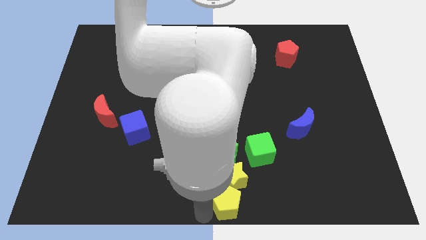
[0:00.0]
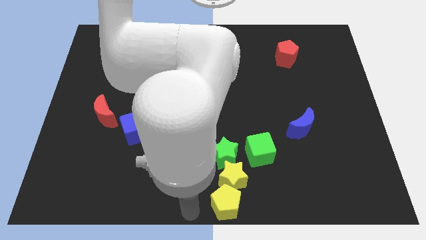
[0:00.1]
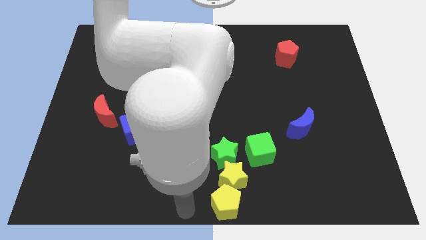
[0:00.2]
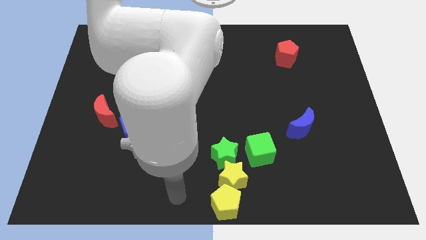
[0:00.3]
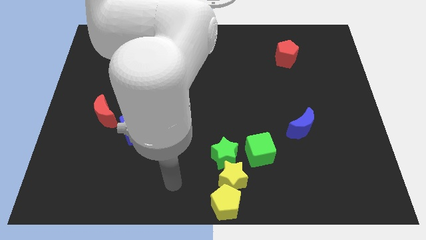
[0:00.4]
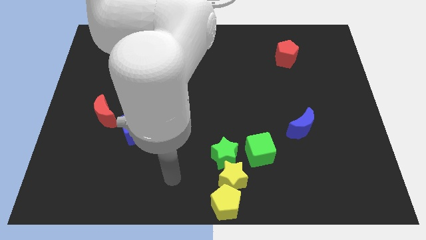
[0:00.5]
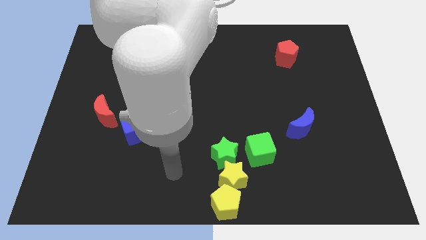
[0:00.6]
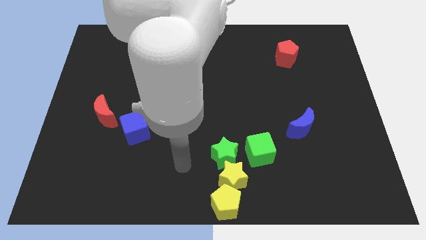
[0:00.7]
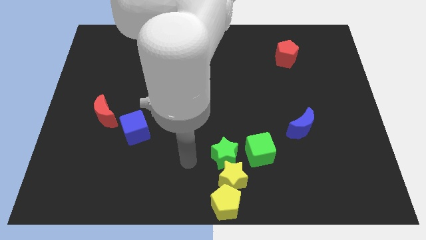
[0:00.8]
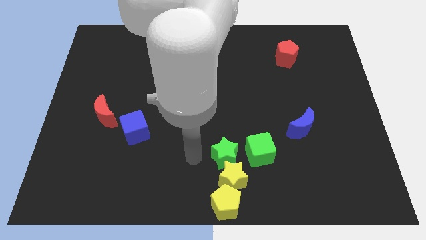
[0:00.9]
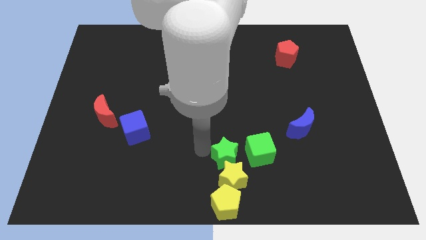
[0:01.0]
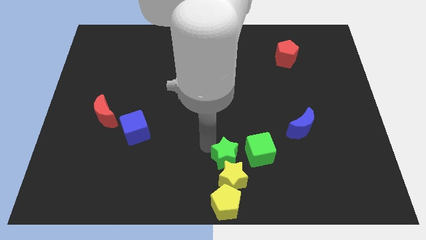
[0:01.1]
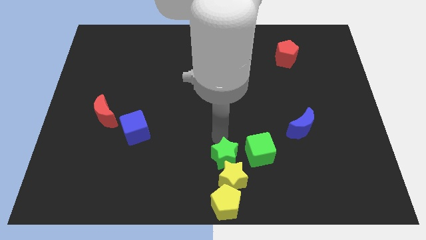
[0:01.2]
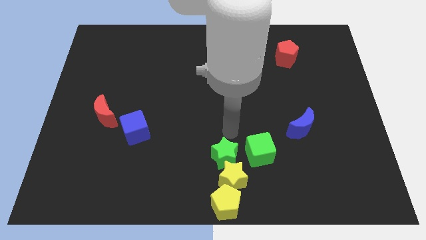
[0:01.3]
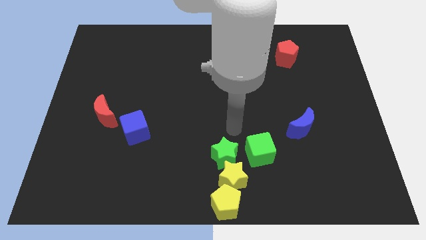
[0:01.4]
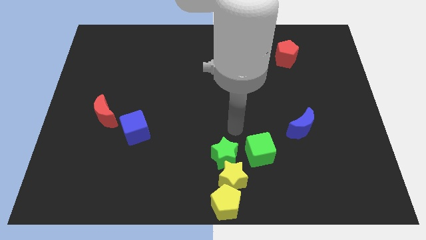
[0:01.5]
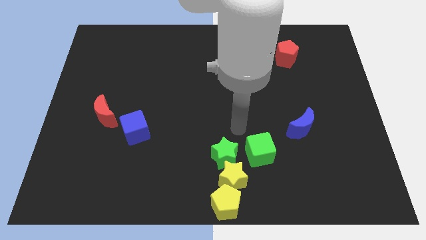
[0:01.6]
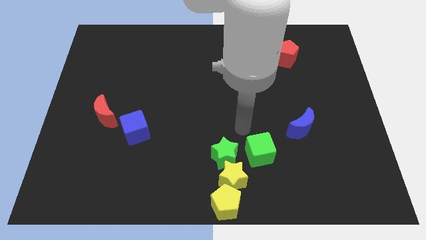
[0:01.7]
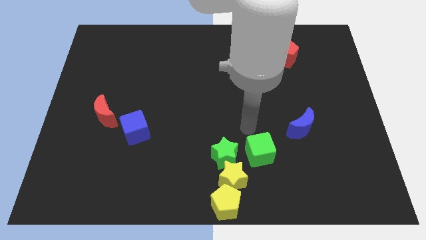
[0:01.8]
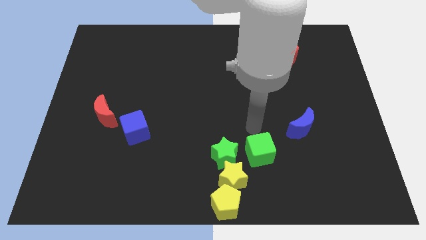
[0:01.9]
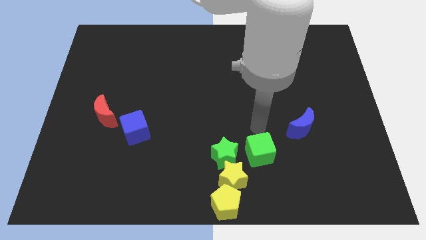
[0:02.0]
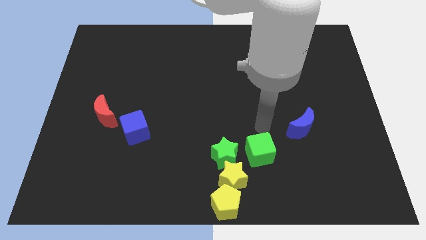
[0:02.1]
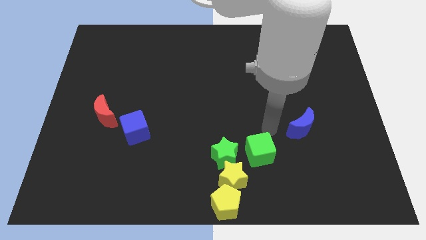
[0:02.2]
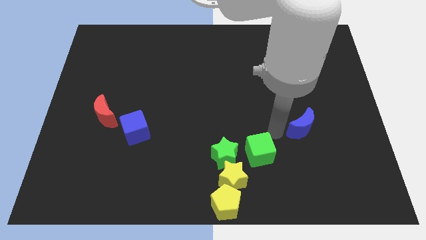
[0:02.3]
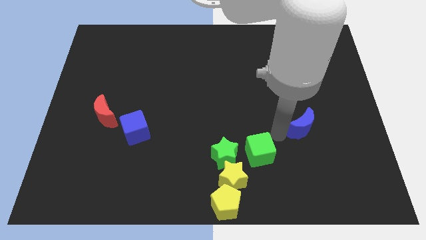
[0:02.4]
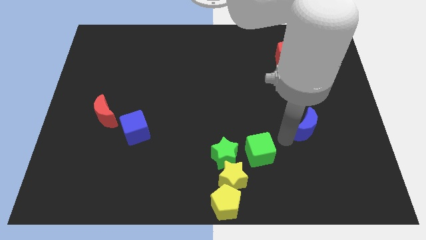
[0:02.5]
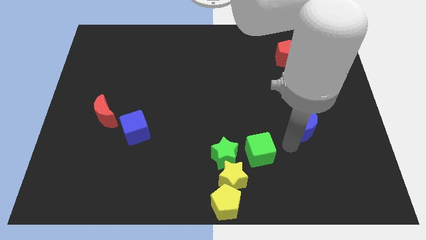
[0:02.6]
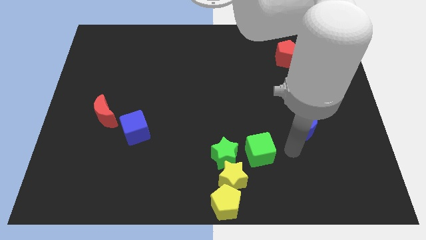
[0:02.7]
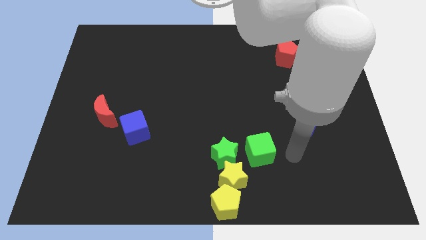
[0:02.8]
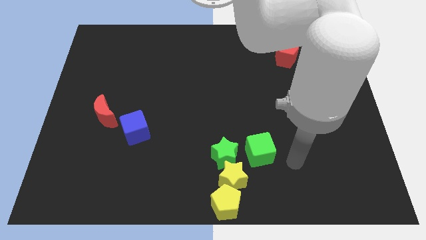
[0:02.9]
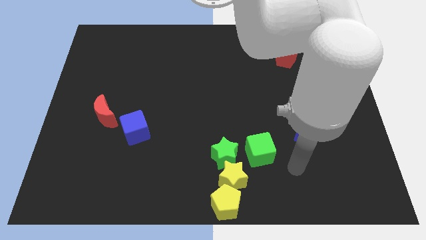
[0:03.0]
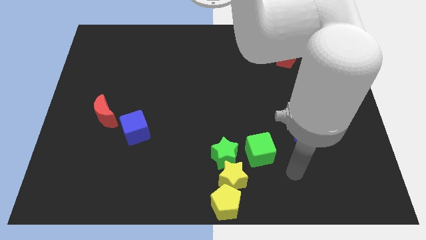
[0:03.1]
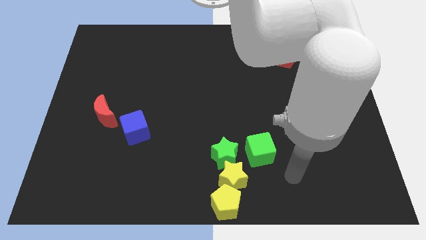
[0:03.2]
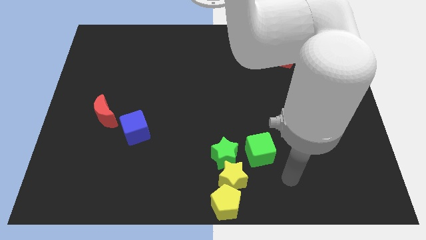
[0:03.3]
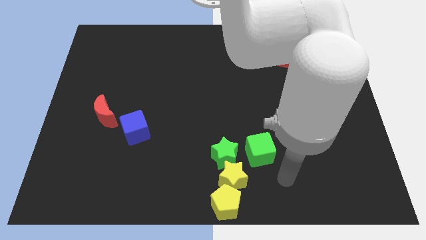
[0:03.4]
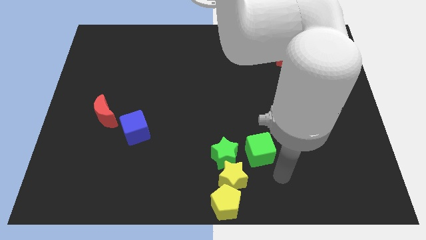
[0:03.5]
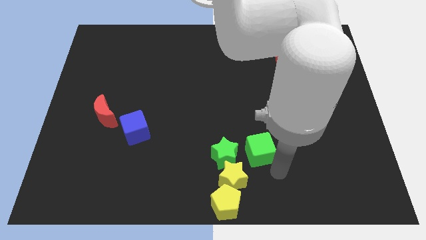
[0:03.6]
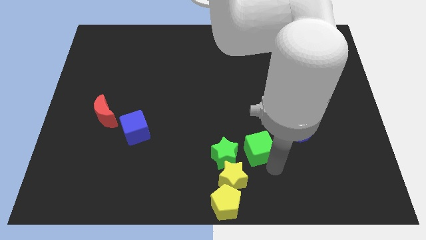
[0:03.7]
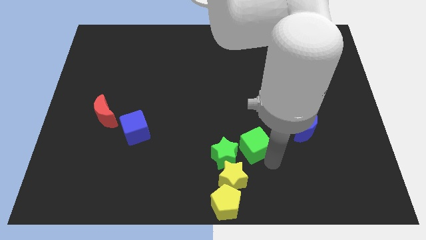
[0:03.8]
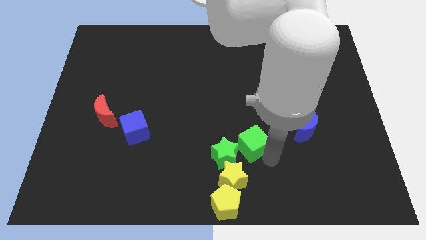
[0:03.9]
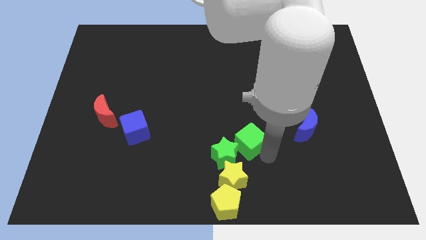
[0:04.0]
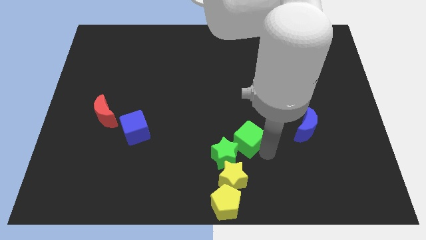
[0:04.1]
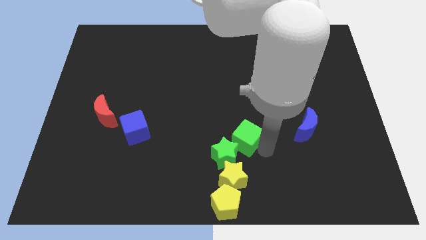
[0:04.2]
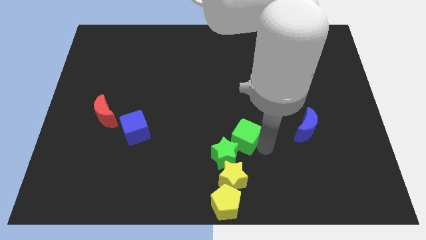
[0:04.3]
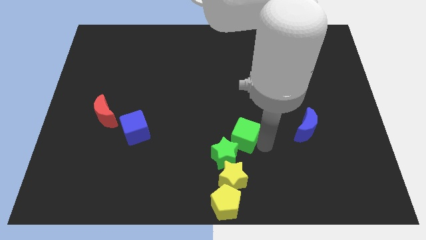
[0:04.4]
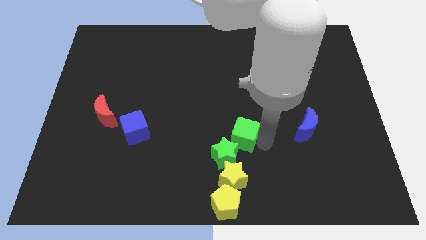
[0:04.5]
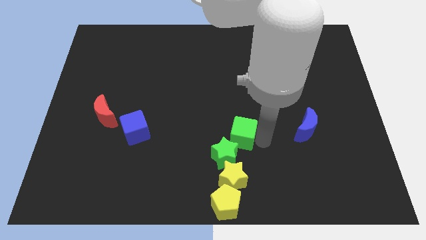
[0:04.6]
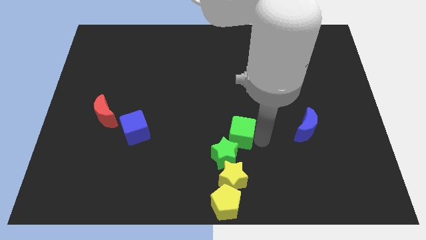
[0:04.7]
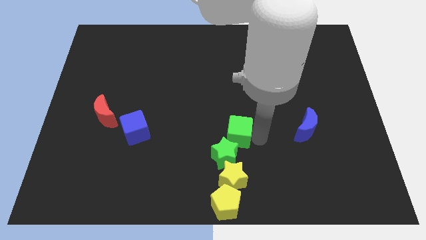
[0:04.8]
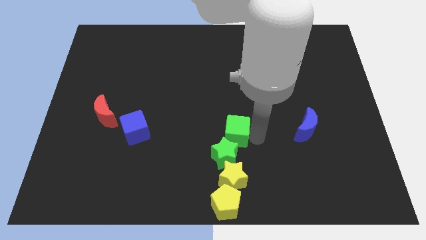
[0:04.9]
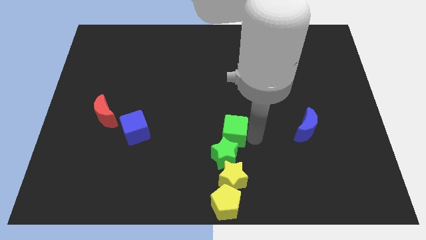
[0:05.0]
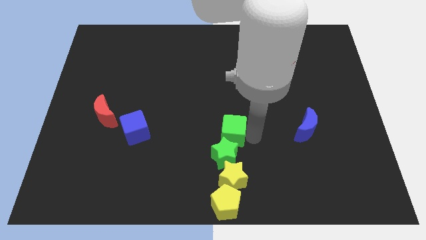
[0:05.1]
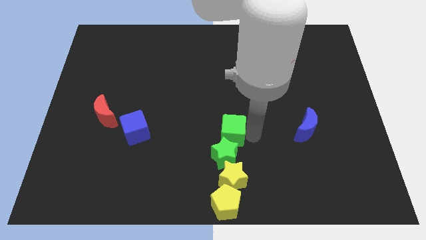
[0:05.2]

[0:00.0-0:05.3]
move the green cube to the top side of the green star

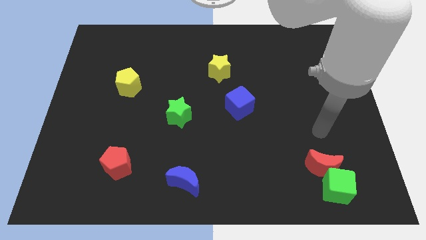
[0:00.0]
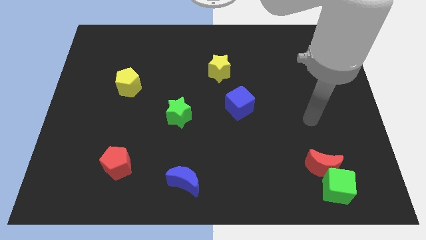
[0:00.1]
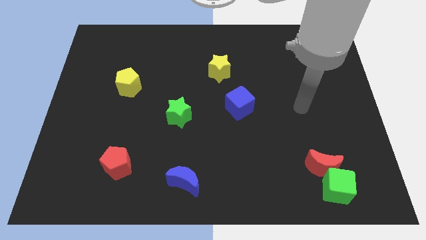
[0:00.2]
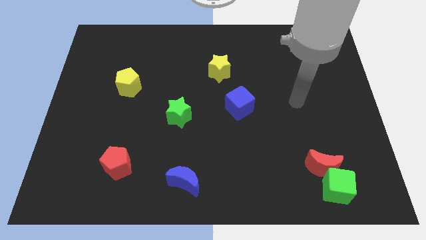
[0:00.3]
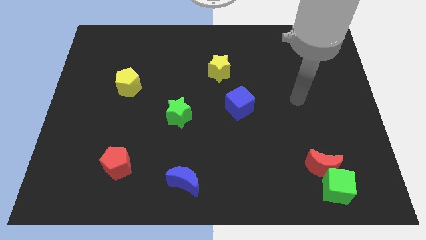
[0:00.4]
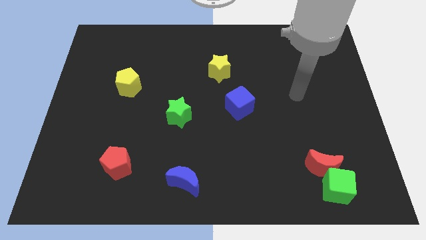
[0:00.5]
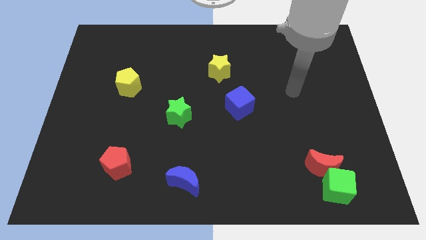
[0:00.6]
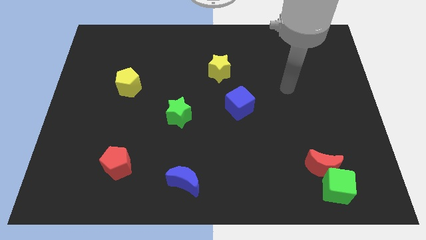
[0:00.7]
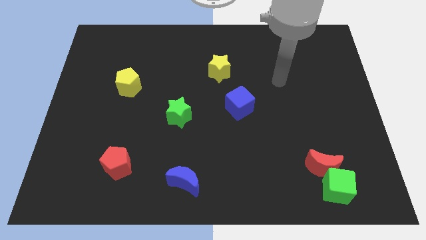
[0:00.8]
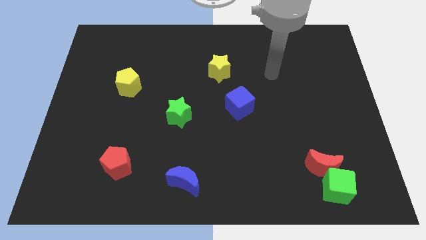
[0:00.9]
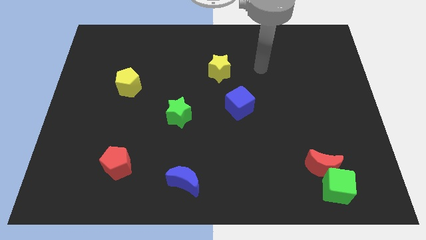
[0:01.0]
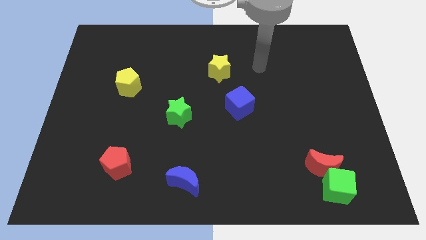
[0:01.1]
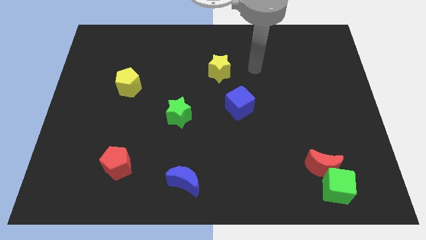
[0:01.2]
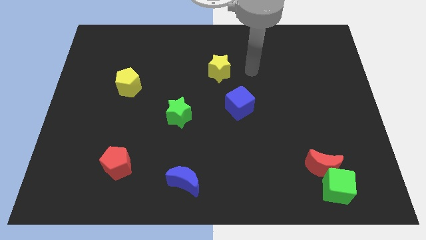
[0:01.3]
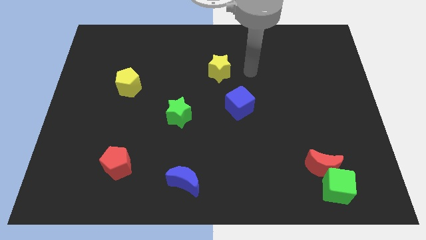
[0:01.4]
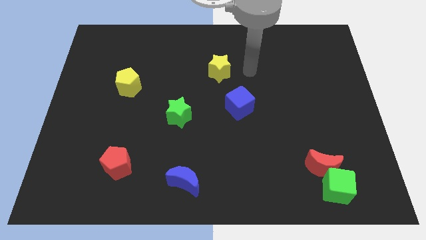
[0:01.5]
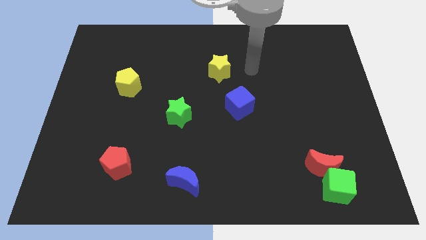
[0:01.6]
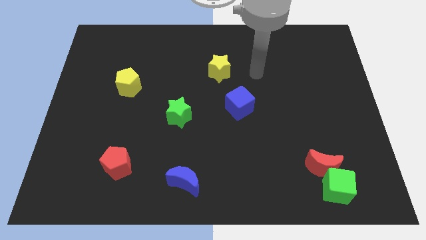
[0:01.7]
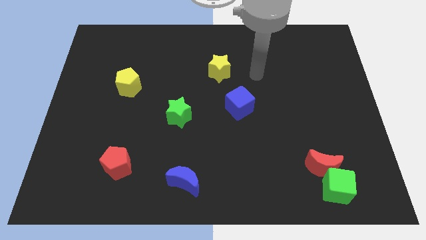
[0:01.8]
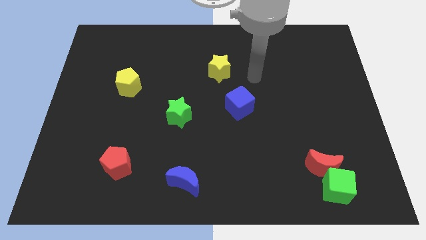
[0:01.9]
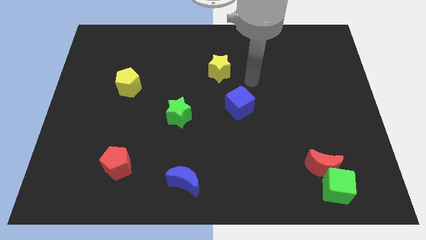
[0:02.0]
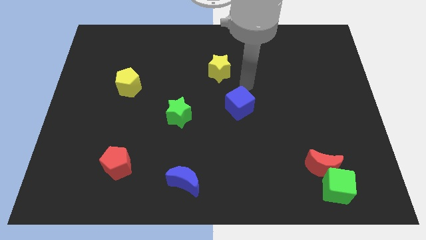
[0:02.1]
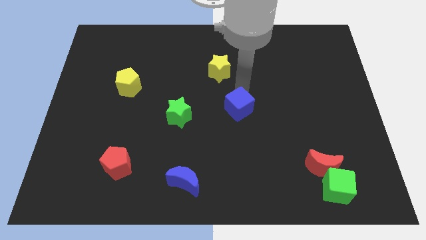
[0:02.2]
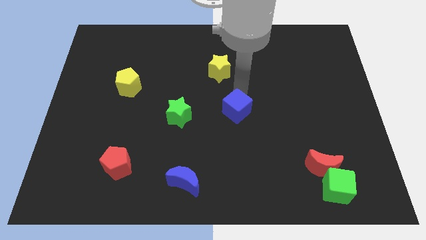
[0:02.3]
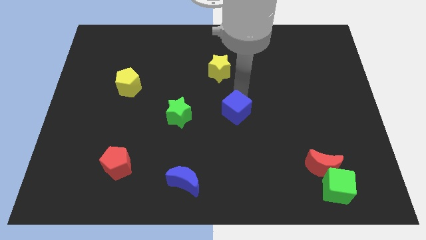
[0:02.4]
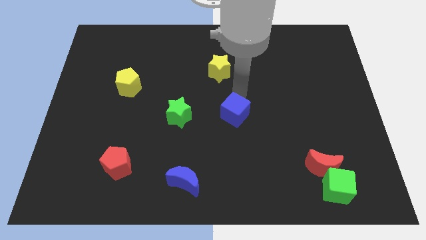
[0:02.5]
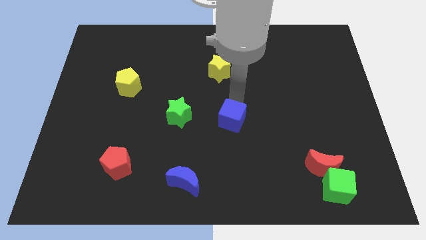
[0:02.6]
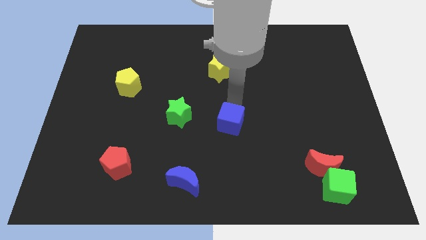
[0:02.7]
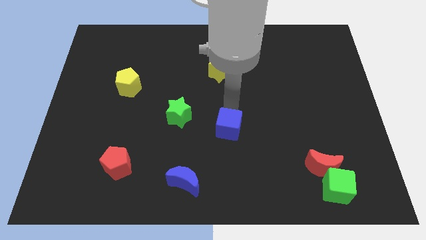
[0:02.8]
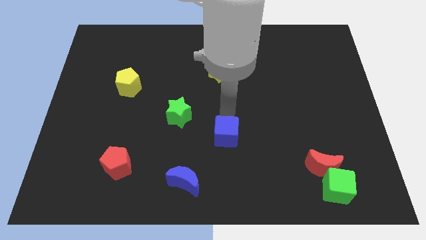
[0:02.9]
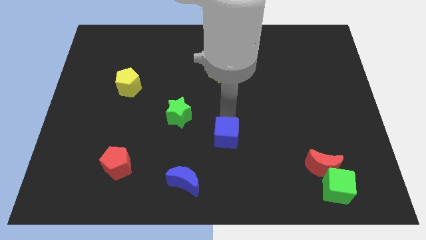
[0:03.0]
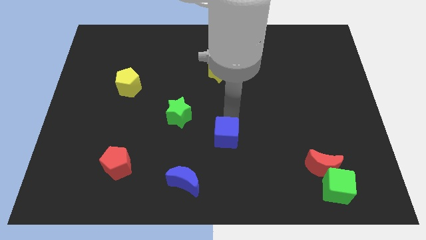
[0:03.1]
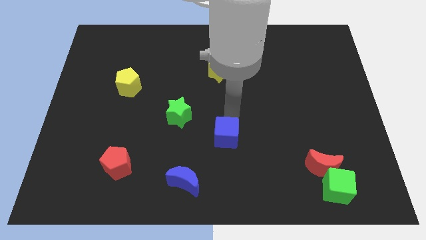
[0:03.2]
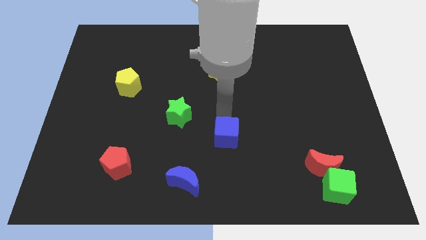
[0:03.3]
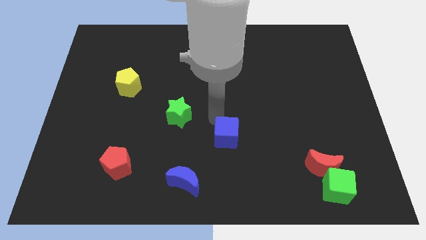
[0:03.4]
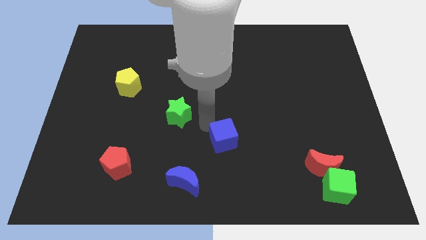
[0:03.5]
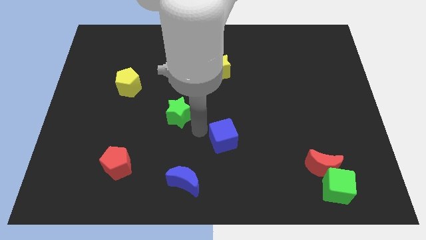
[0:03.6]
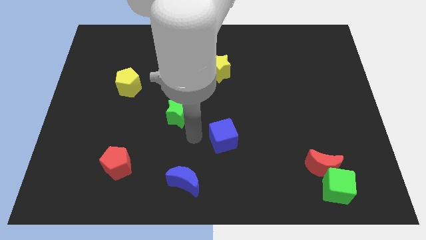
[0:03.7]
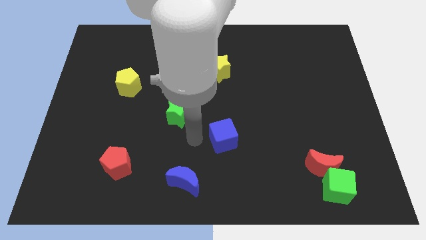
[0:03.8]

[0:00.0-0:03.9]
move the blue cube vertical to the yellow star
